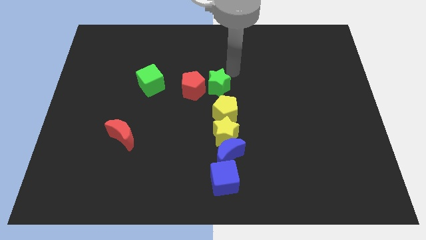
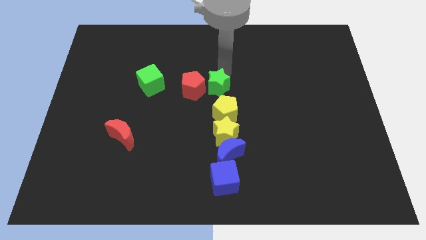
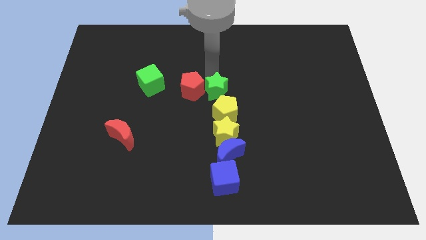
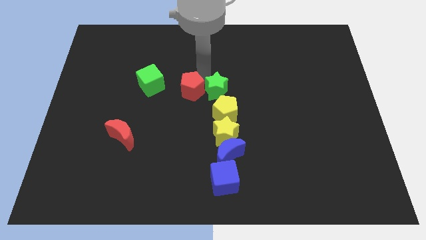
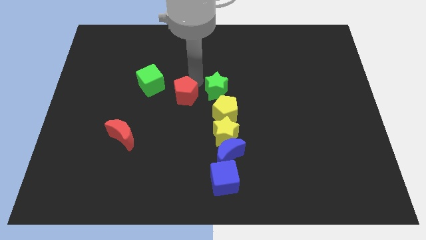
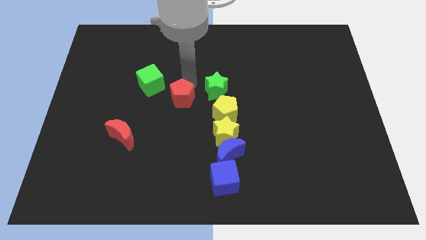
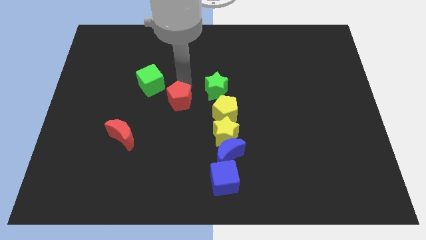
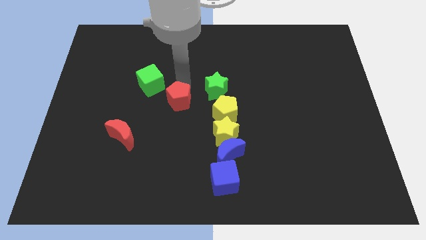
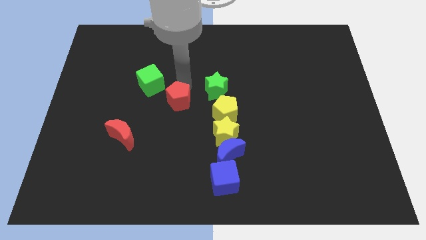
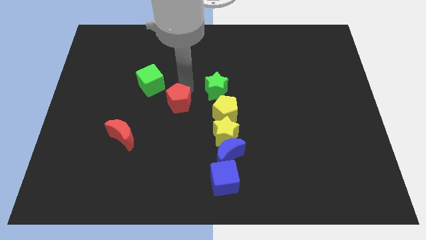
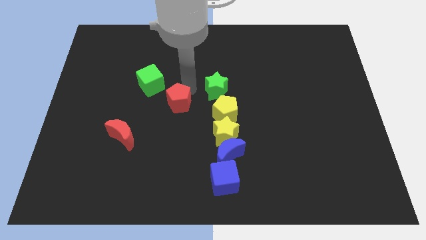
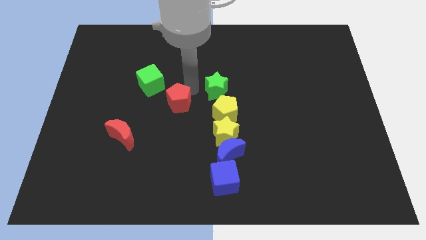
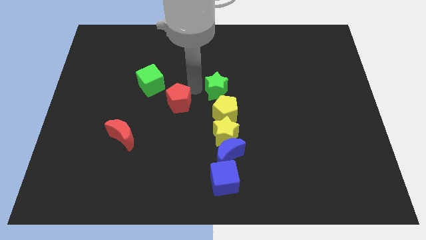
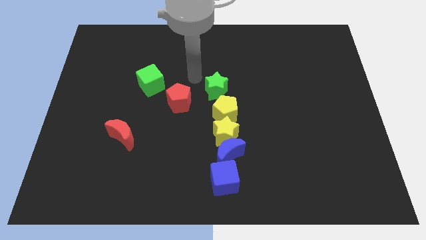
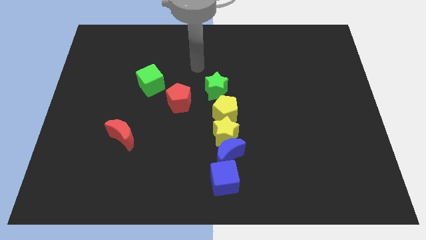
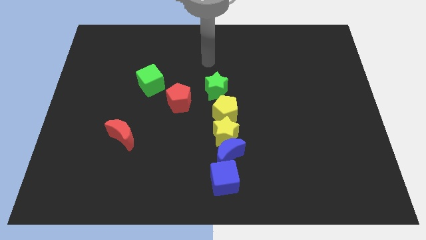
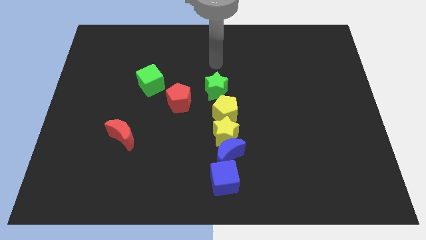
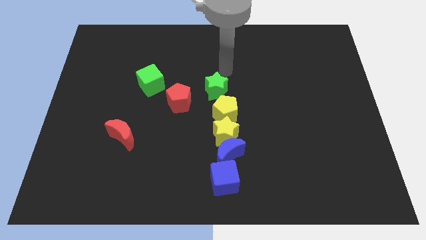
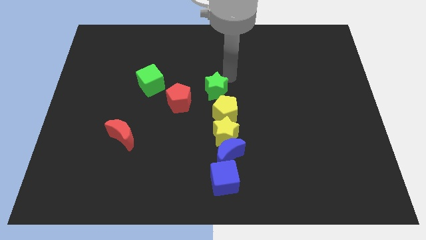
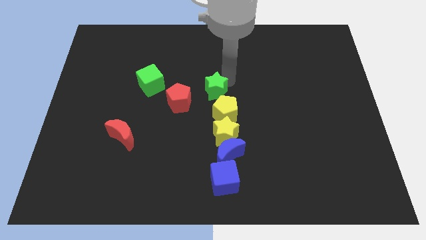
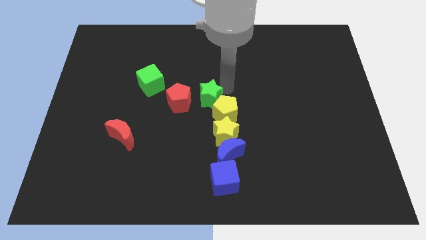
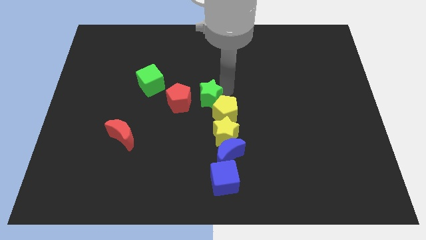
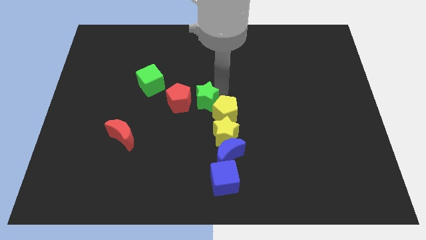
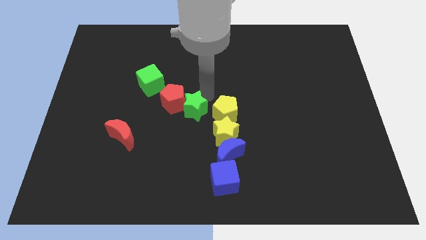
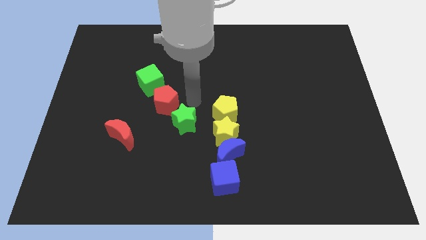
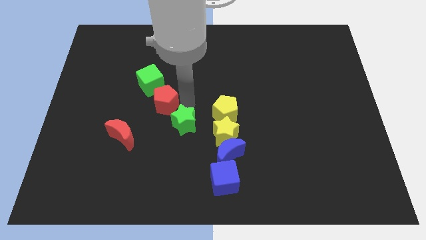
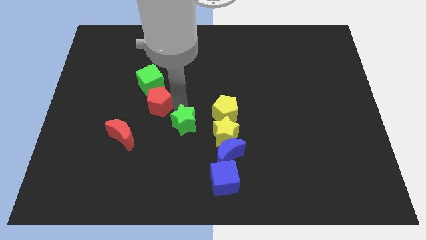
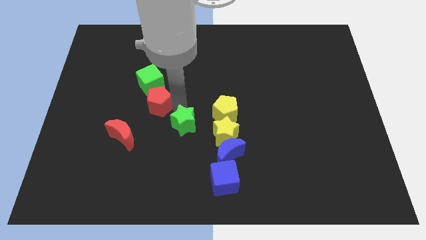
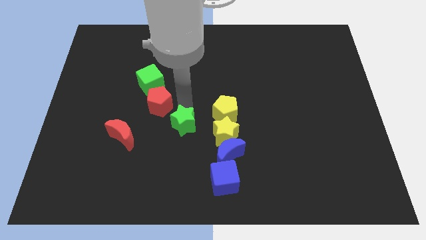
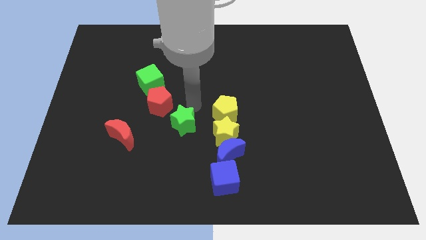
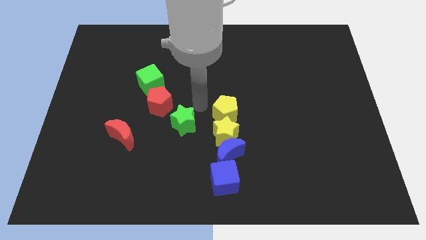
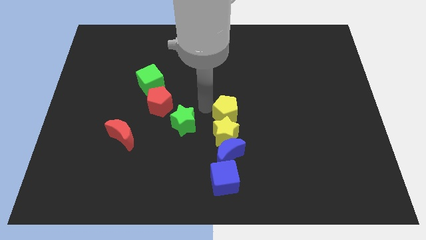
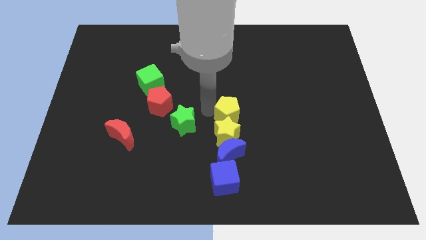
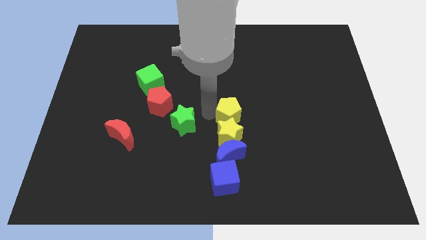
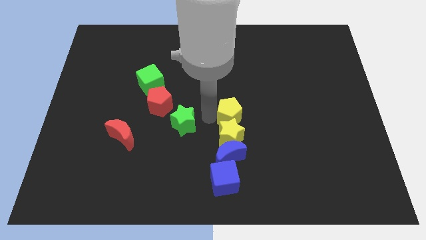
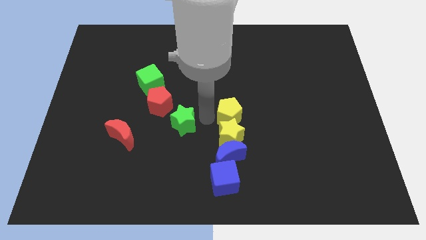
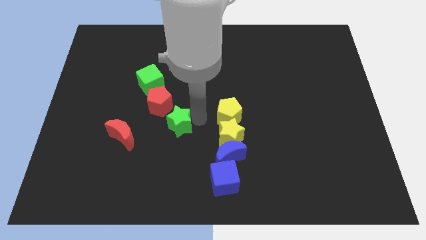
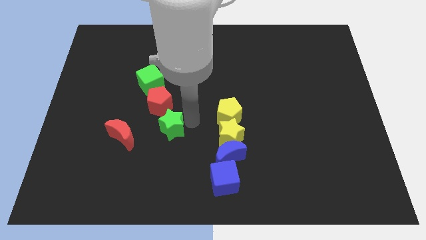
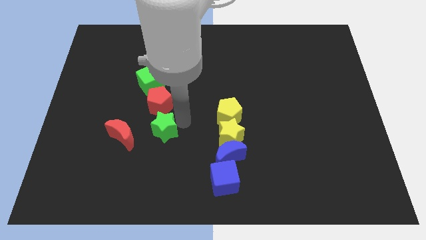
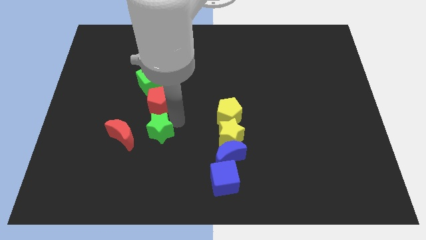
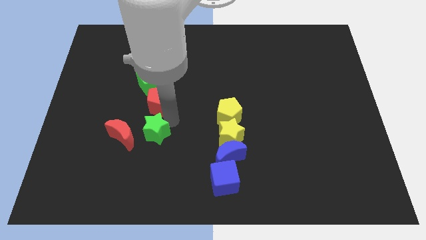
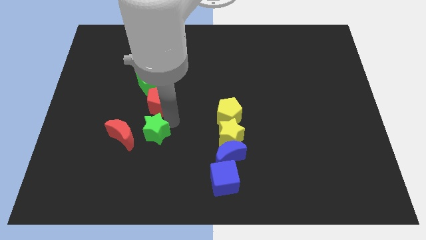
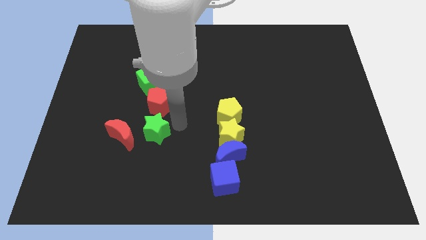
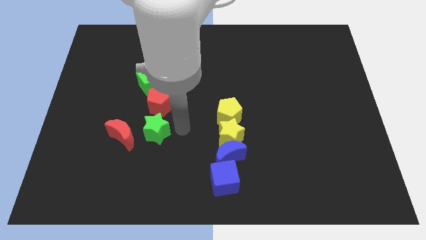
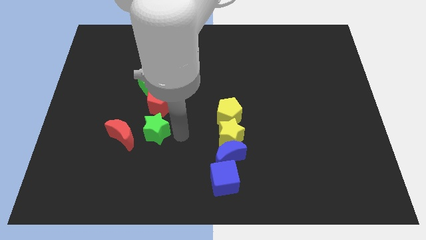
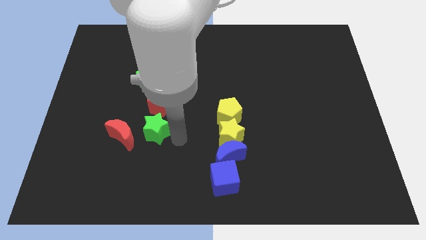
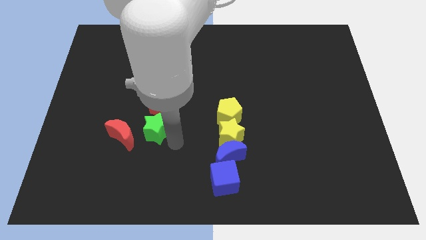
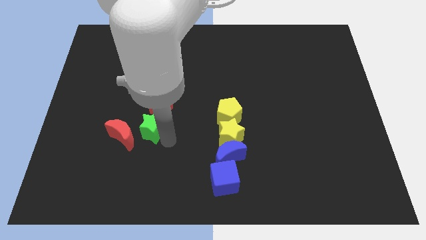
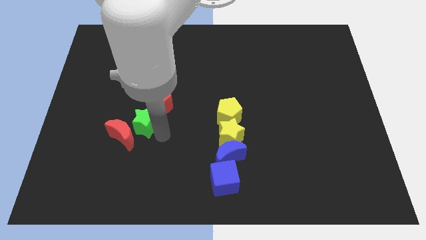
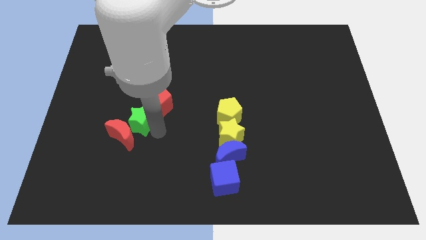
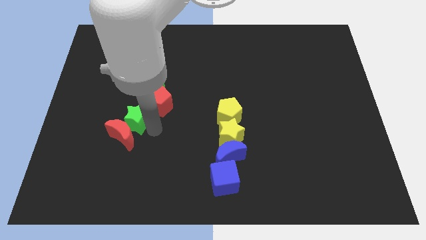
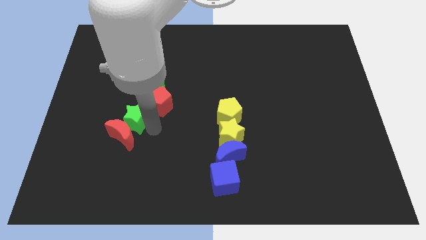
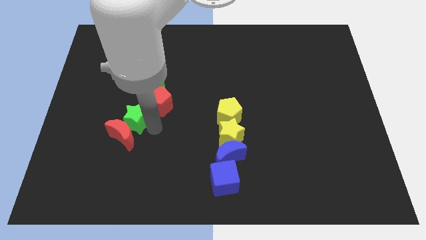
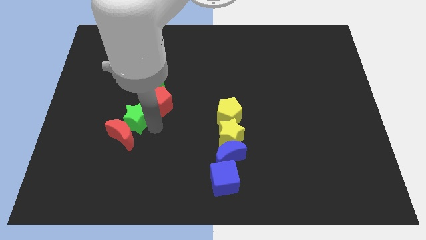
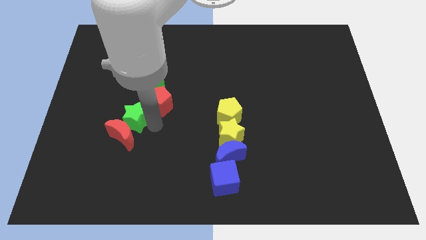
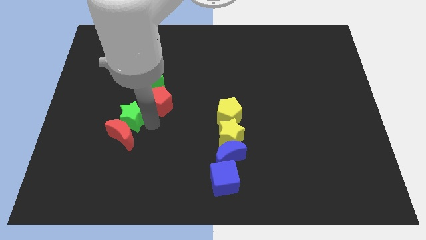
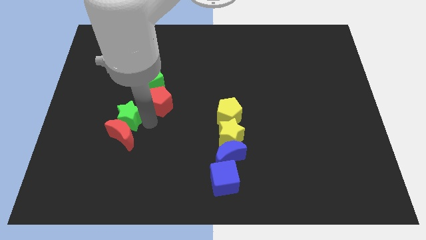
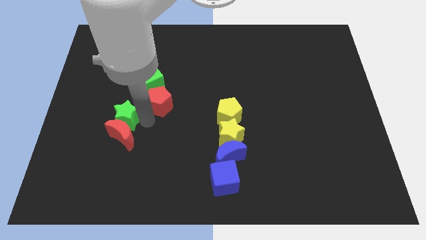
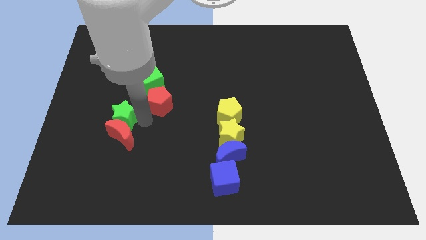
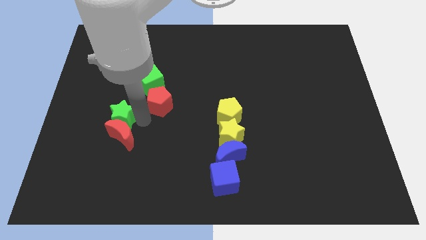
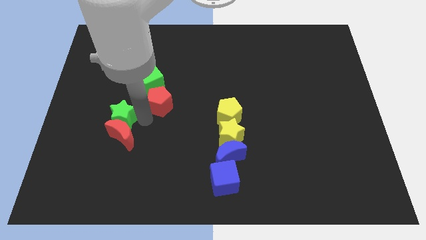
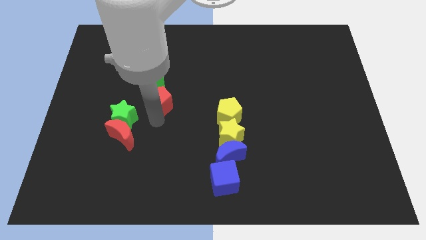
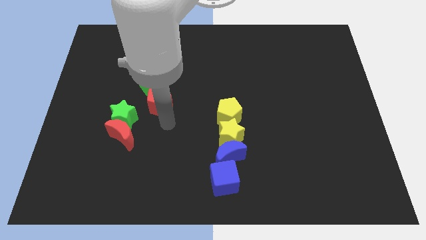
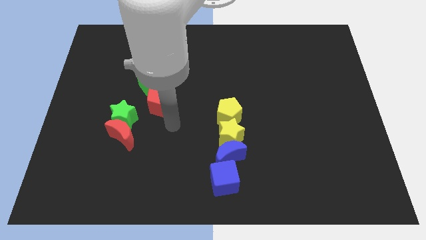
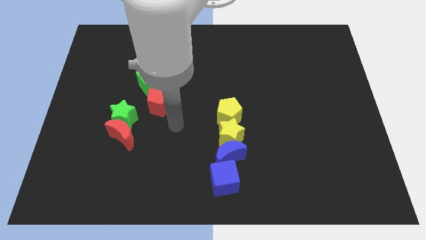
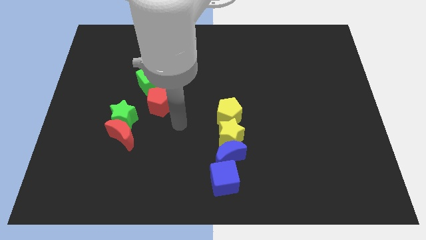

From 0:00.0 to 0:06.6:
place the green star to top of the red moon

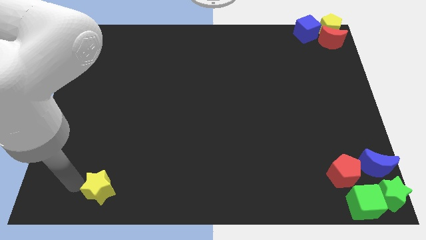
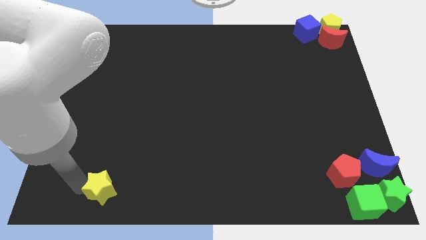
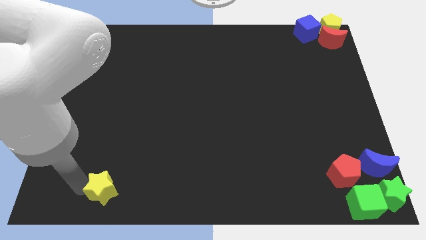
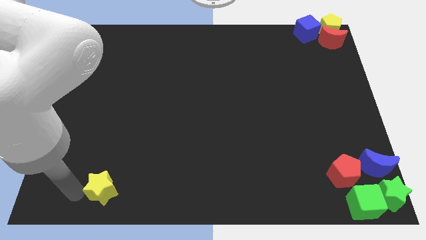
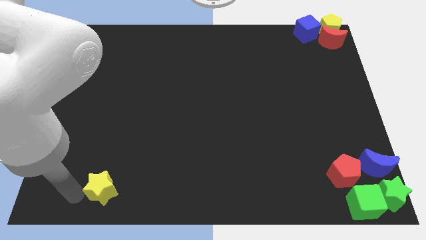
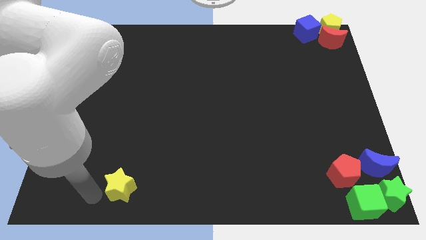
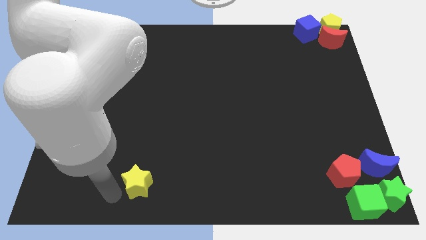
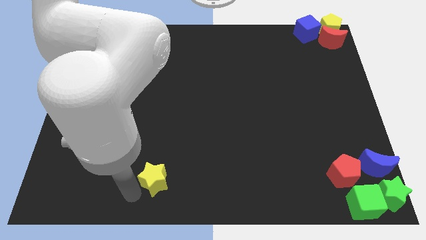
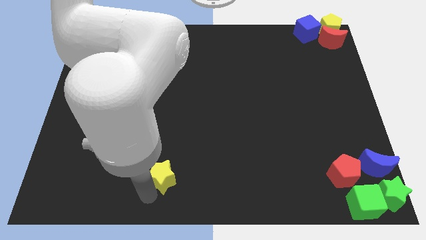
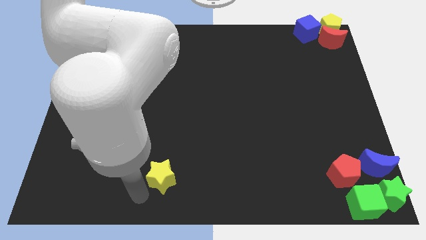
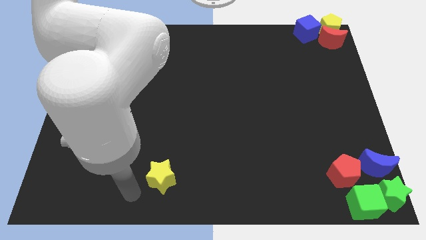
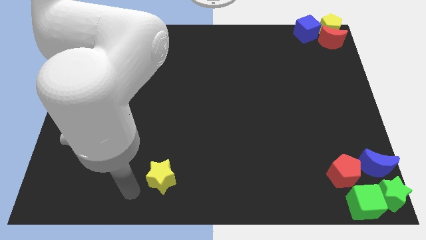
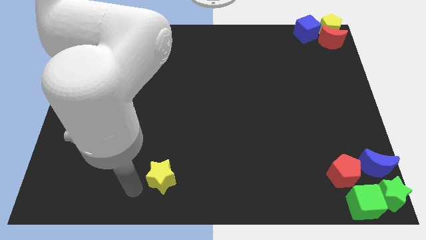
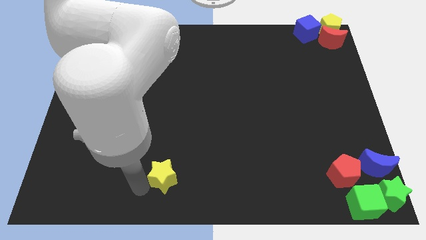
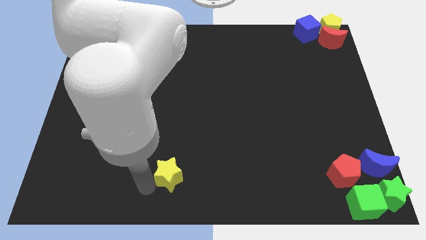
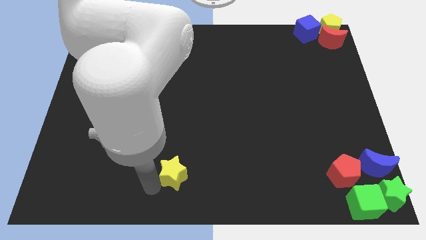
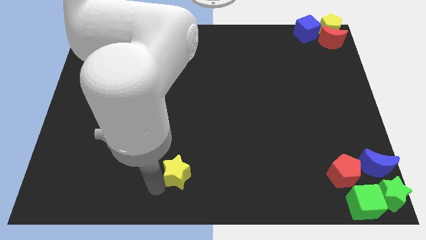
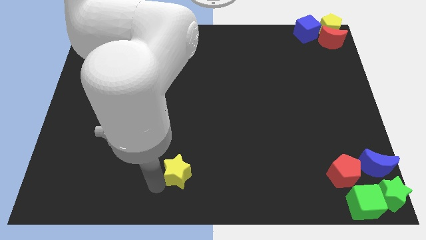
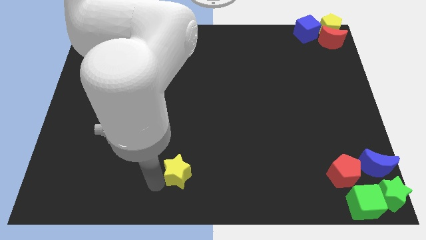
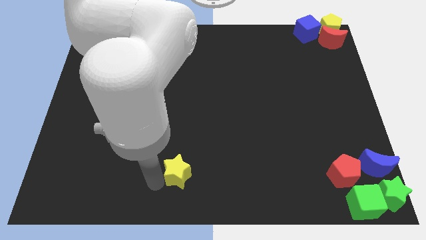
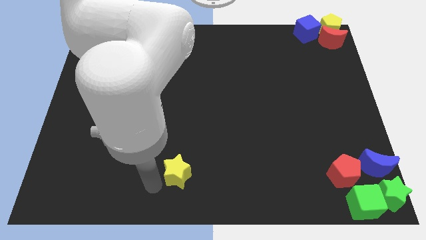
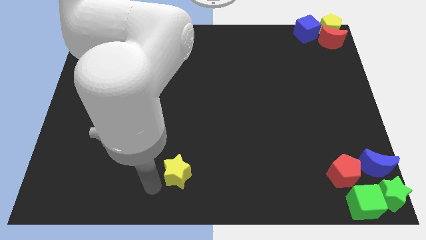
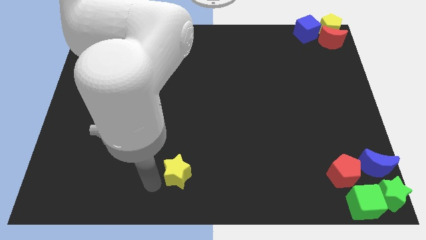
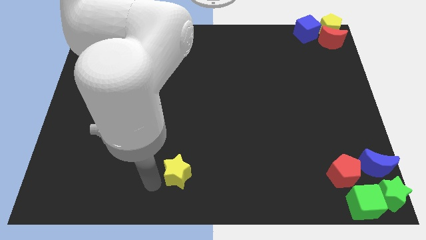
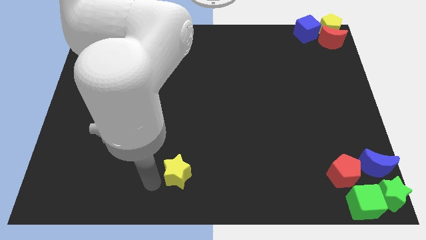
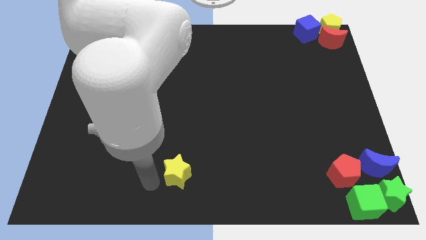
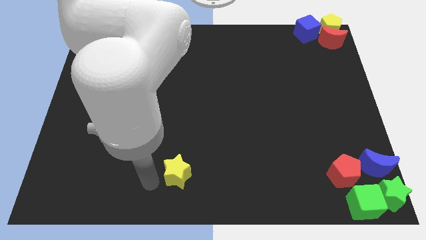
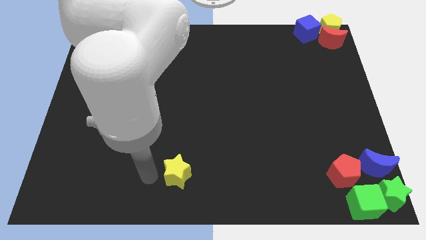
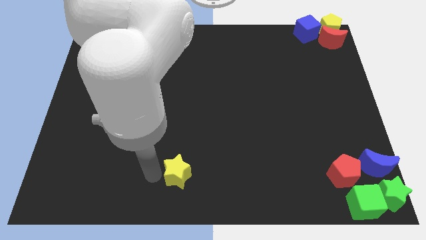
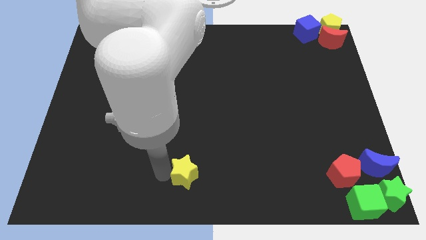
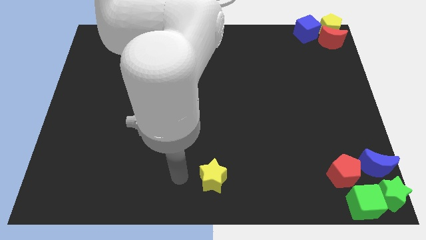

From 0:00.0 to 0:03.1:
move the yellow star to the bottom center of the table
